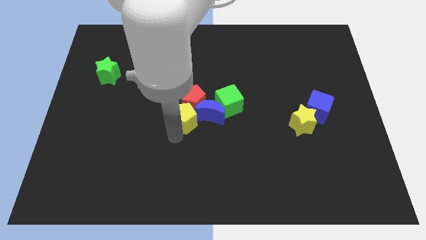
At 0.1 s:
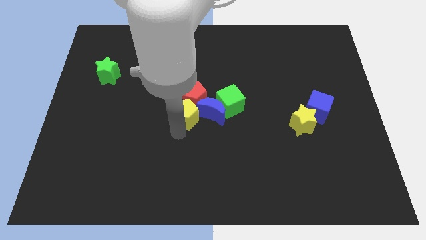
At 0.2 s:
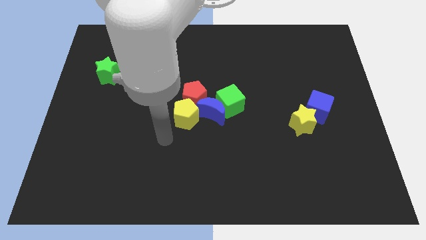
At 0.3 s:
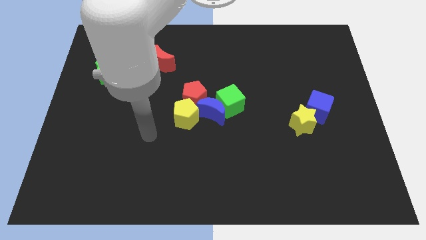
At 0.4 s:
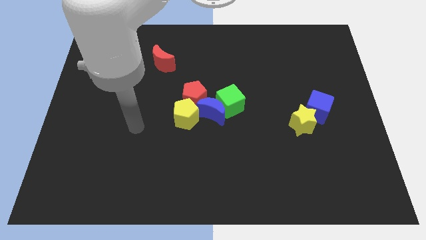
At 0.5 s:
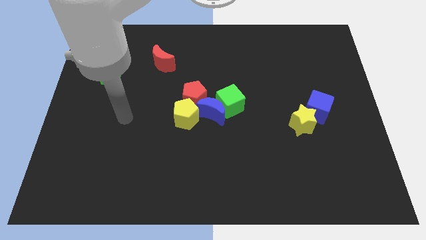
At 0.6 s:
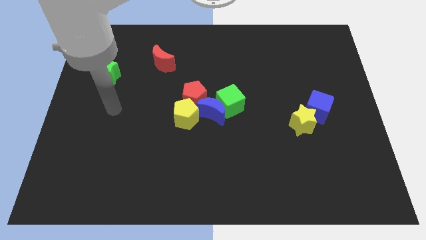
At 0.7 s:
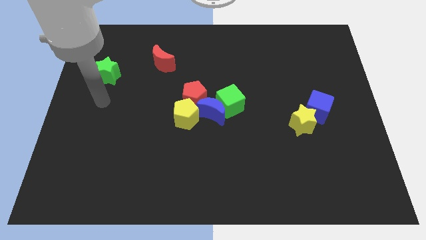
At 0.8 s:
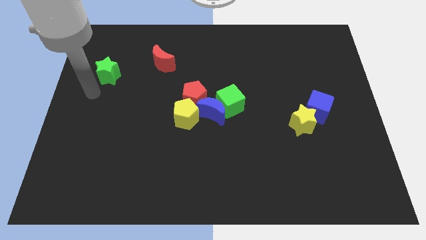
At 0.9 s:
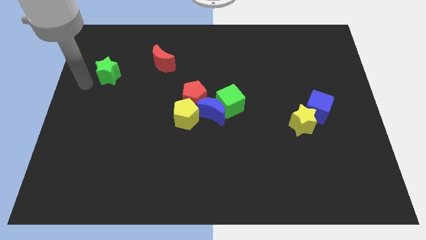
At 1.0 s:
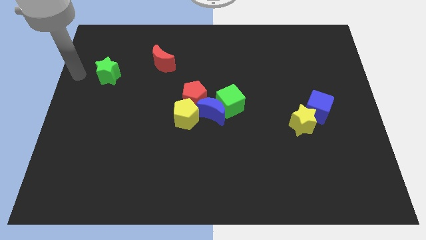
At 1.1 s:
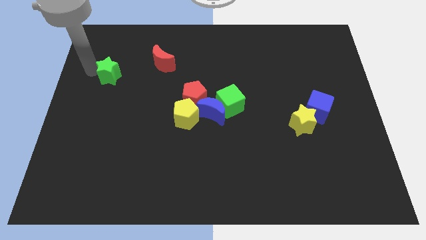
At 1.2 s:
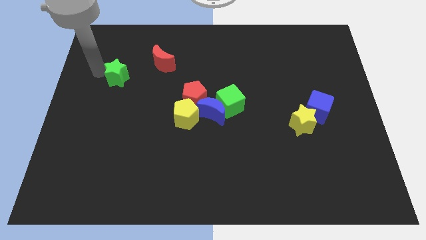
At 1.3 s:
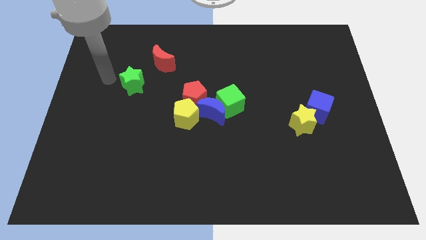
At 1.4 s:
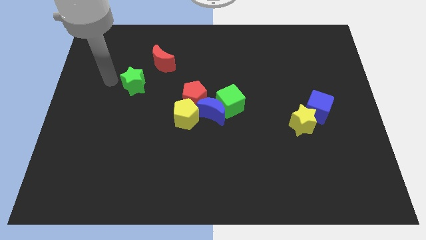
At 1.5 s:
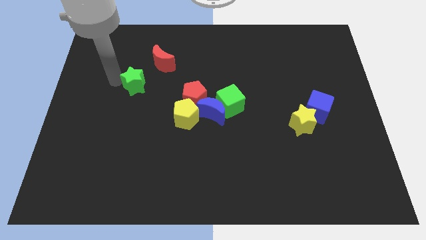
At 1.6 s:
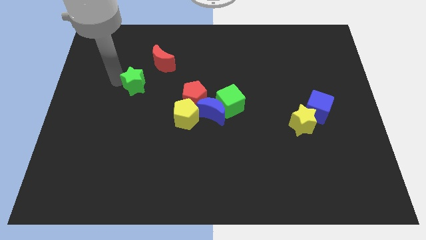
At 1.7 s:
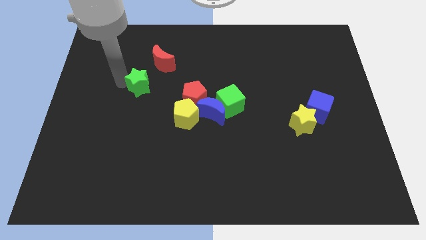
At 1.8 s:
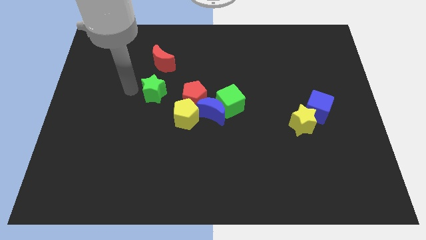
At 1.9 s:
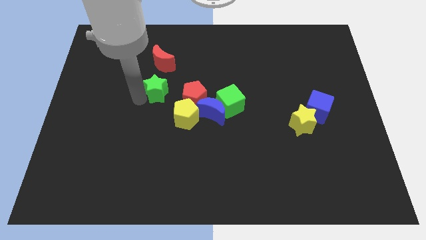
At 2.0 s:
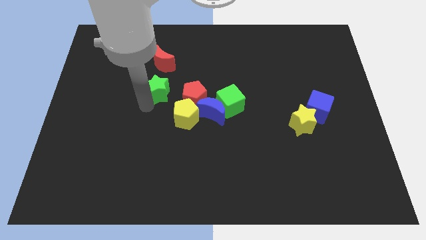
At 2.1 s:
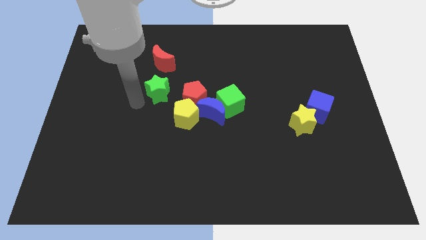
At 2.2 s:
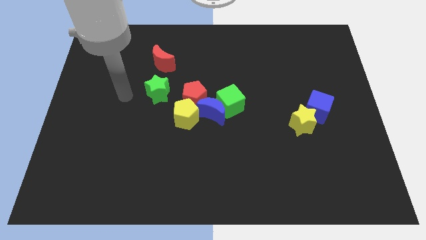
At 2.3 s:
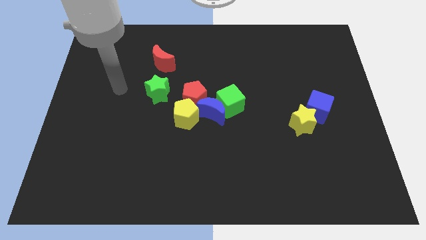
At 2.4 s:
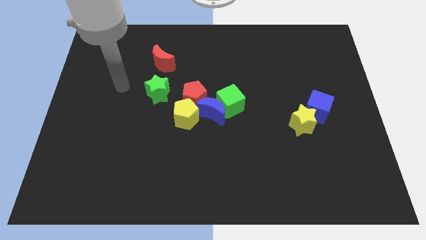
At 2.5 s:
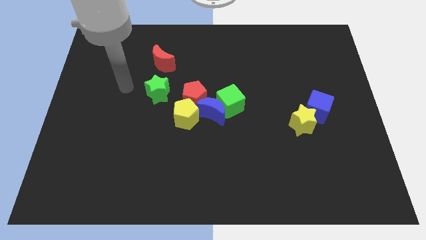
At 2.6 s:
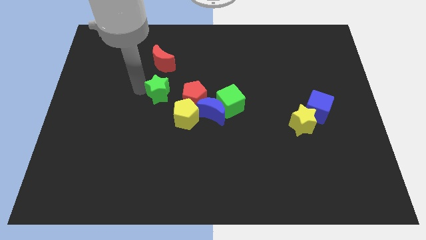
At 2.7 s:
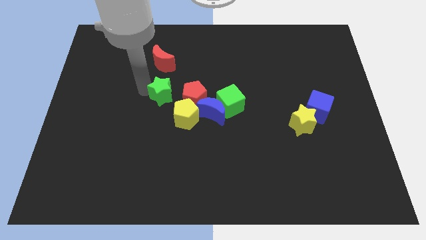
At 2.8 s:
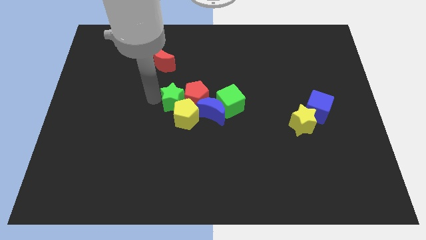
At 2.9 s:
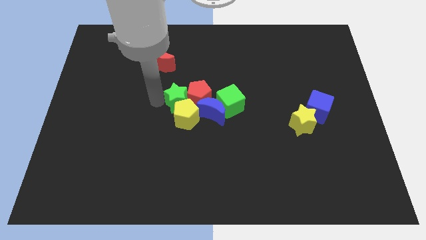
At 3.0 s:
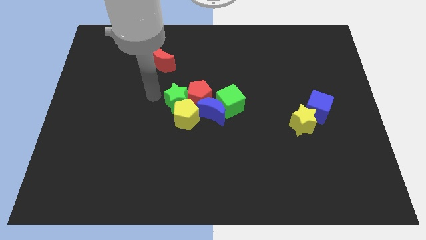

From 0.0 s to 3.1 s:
move the green star into group of blocks

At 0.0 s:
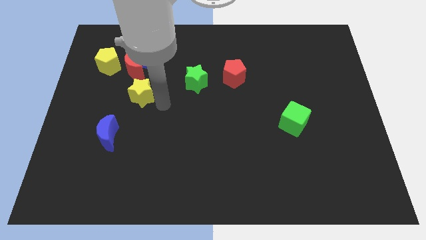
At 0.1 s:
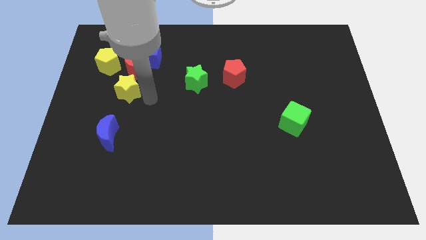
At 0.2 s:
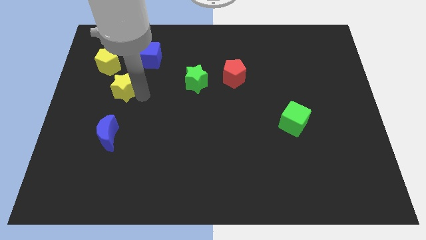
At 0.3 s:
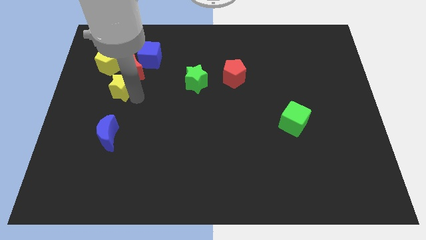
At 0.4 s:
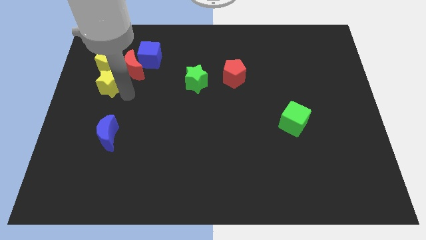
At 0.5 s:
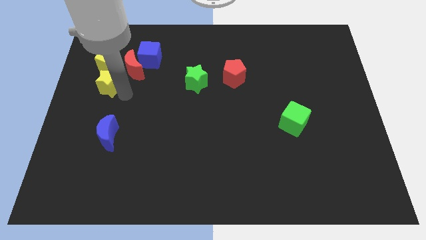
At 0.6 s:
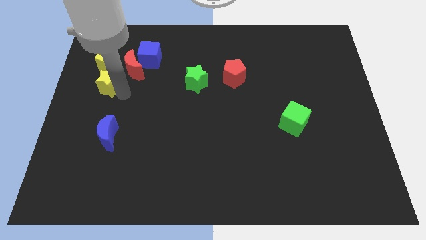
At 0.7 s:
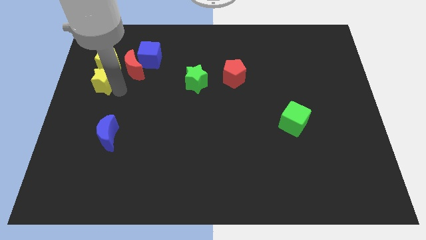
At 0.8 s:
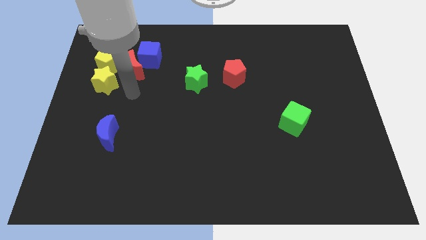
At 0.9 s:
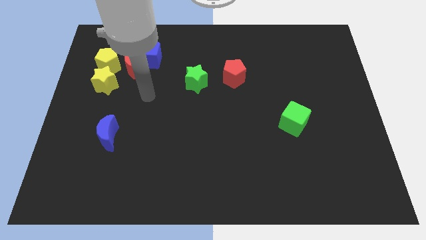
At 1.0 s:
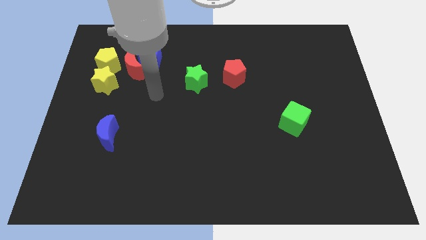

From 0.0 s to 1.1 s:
place the yellow star to the bottom of the yellow pentagon

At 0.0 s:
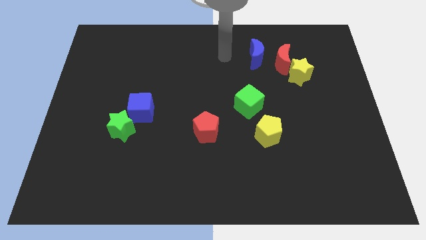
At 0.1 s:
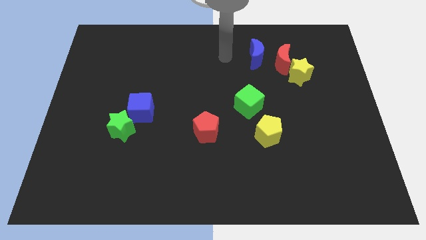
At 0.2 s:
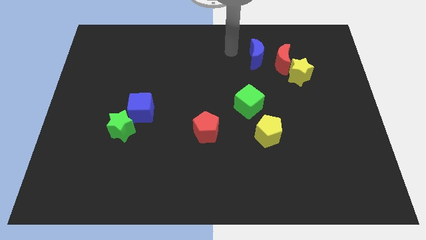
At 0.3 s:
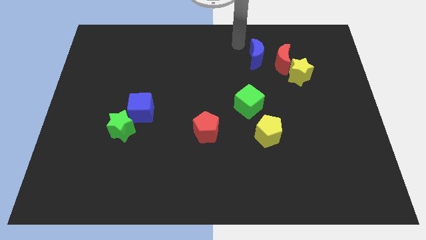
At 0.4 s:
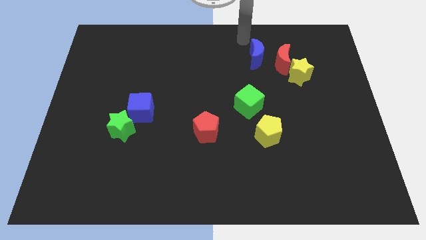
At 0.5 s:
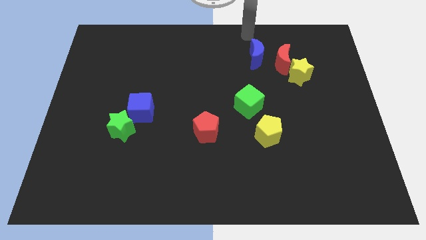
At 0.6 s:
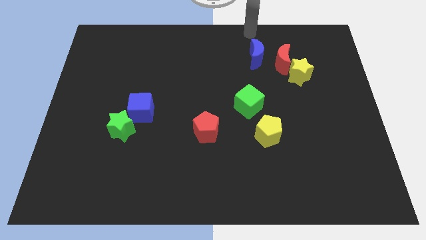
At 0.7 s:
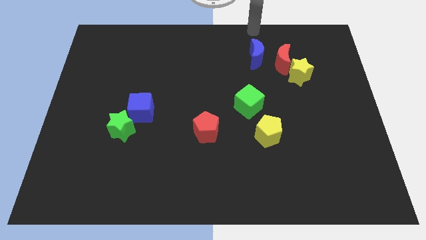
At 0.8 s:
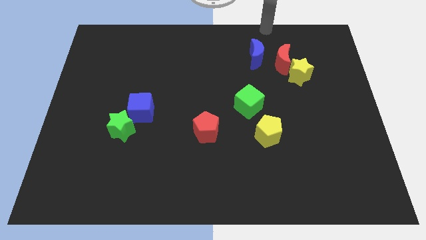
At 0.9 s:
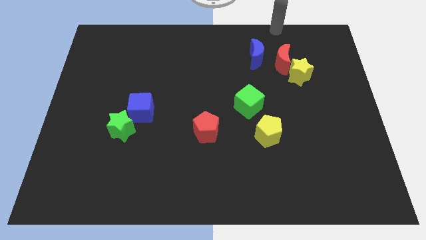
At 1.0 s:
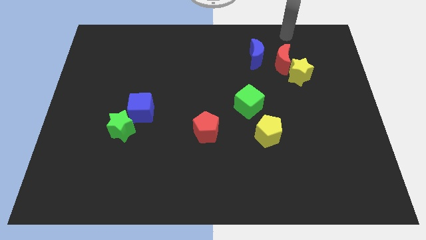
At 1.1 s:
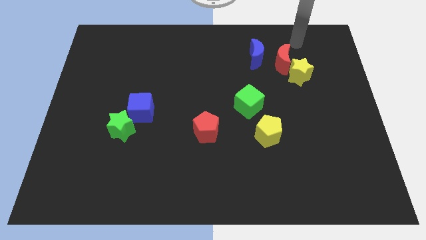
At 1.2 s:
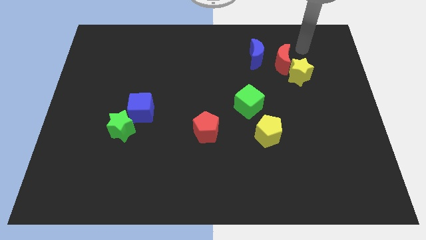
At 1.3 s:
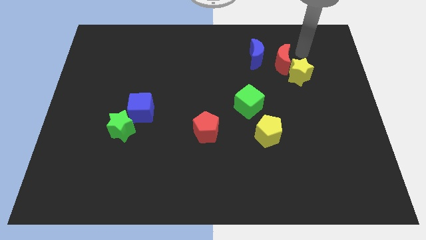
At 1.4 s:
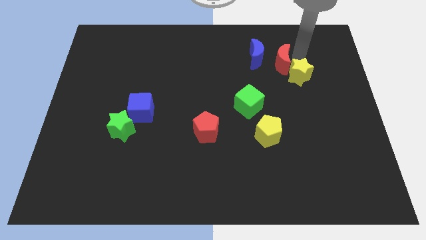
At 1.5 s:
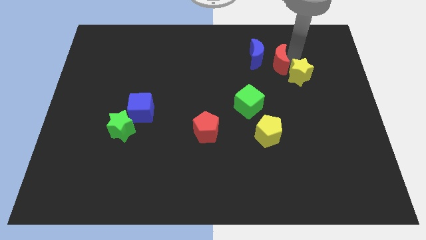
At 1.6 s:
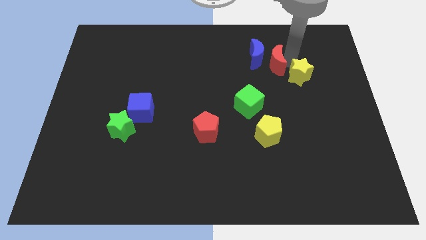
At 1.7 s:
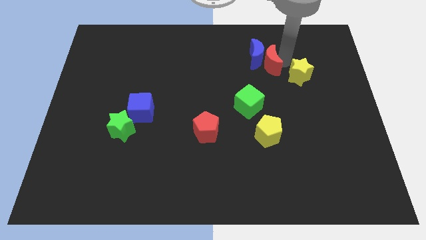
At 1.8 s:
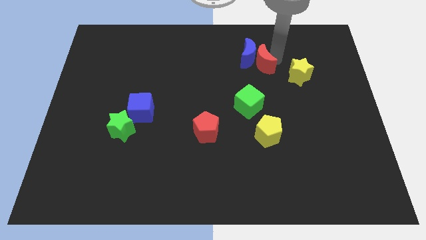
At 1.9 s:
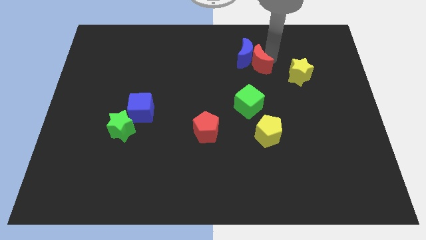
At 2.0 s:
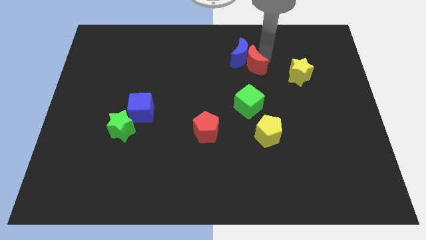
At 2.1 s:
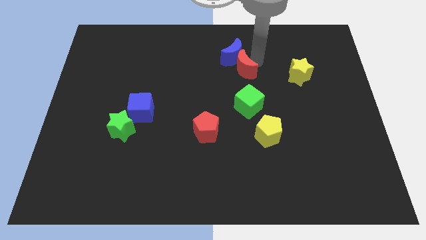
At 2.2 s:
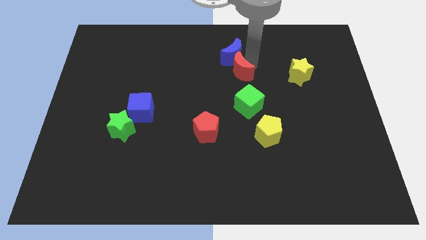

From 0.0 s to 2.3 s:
push the red moon into the blue moon

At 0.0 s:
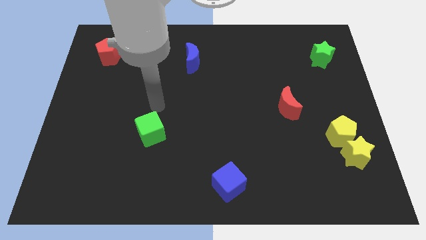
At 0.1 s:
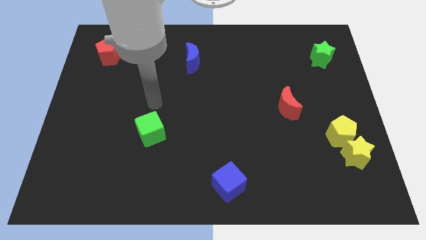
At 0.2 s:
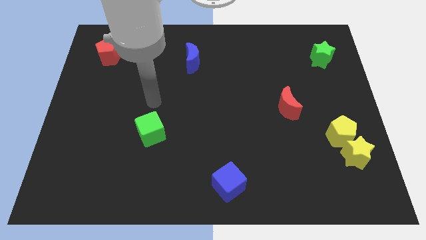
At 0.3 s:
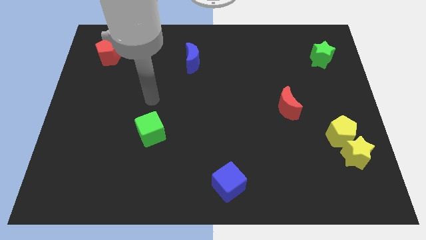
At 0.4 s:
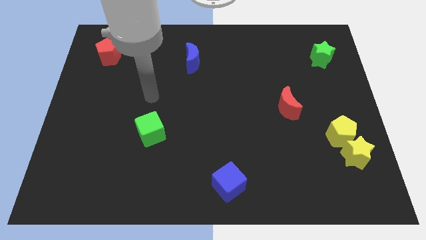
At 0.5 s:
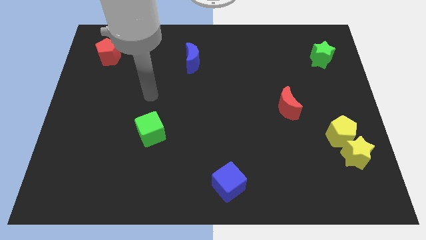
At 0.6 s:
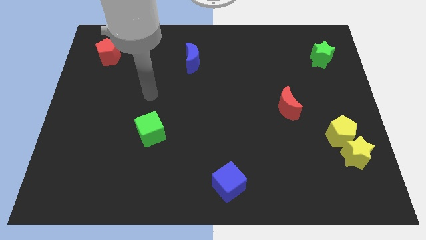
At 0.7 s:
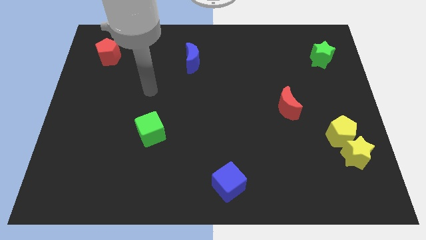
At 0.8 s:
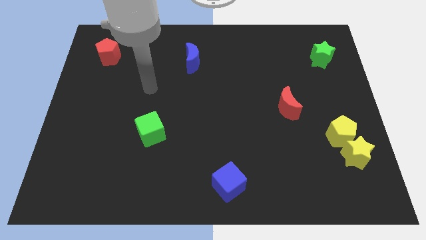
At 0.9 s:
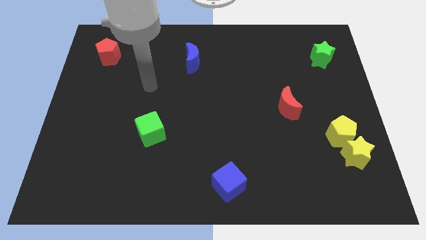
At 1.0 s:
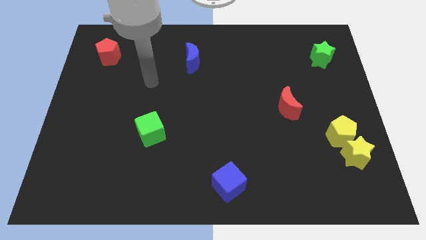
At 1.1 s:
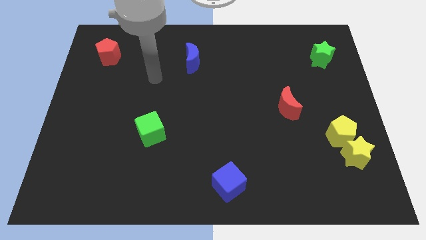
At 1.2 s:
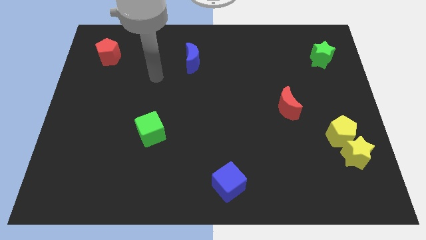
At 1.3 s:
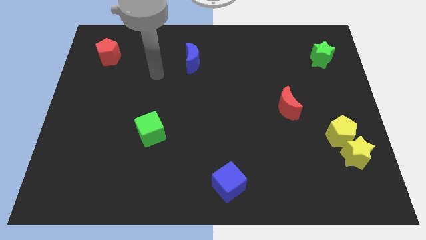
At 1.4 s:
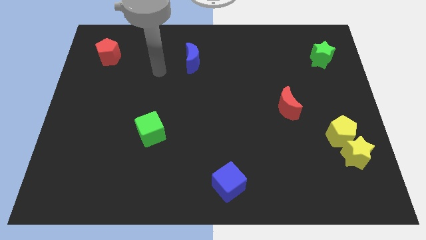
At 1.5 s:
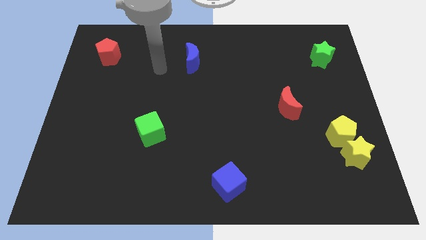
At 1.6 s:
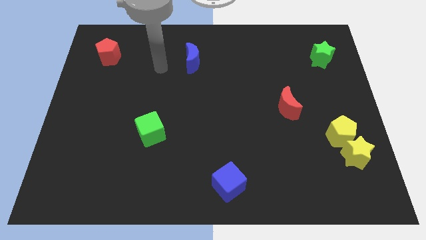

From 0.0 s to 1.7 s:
place your hand in between red pentagon and blue crescent

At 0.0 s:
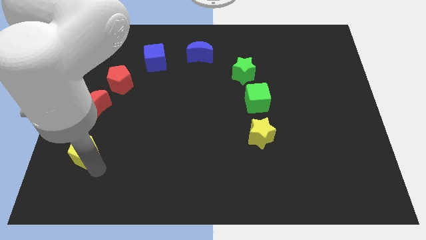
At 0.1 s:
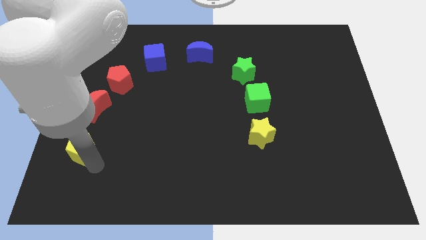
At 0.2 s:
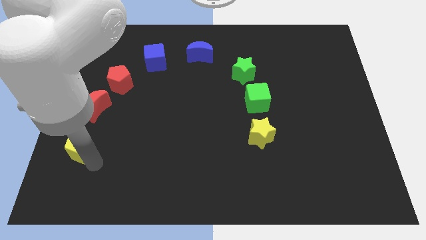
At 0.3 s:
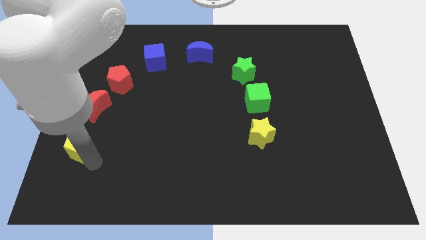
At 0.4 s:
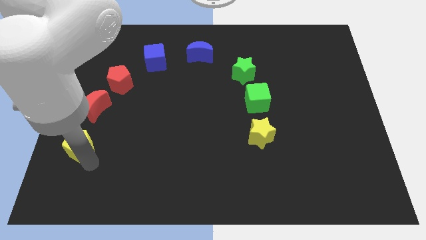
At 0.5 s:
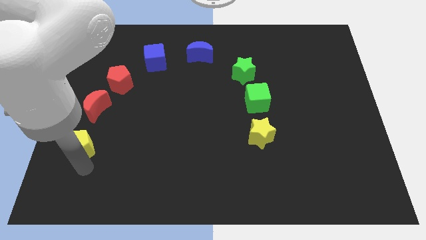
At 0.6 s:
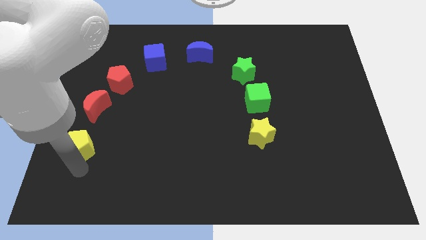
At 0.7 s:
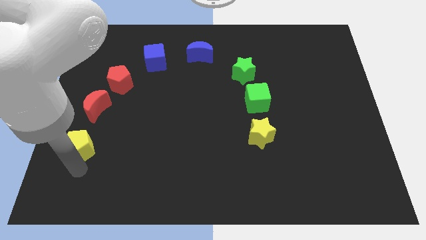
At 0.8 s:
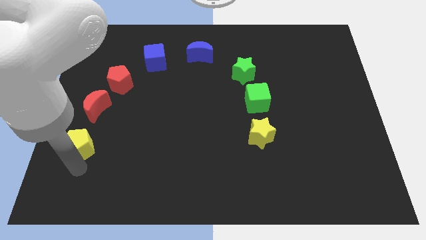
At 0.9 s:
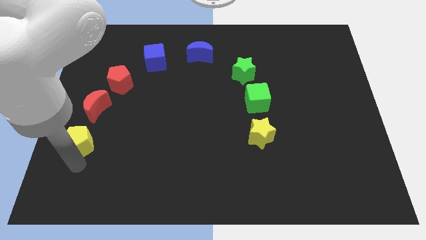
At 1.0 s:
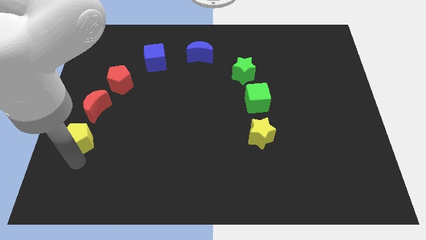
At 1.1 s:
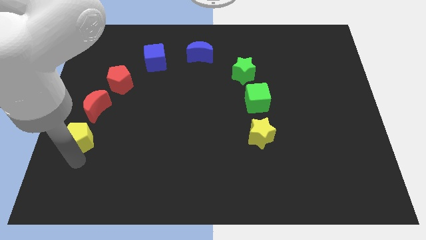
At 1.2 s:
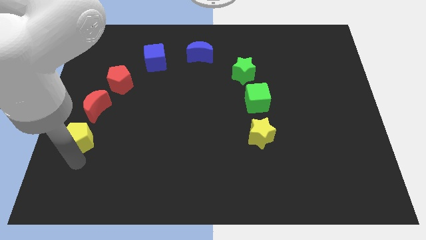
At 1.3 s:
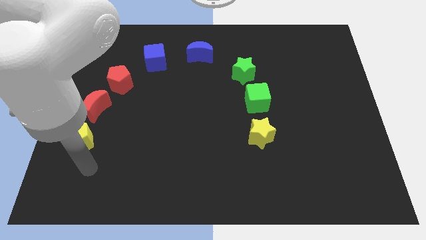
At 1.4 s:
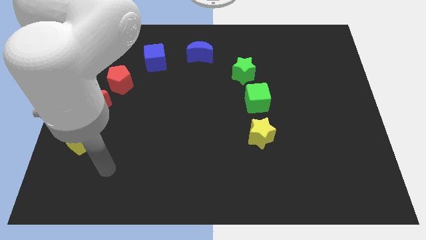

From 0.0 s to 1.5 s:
place yellow pentagon below the red moon
